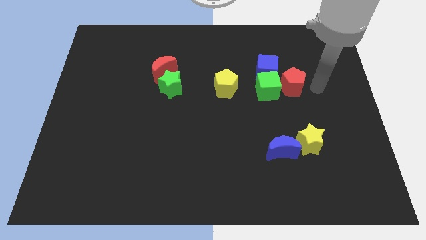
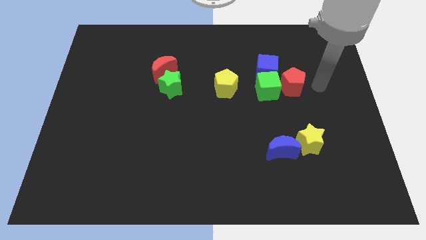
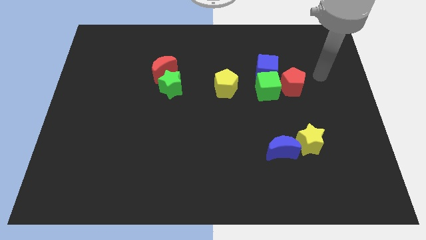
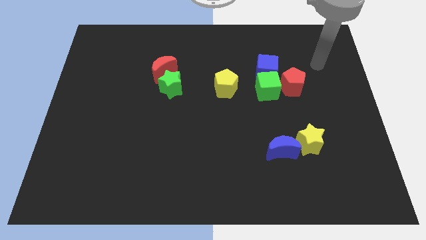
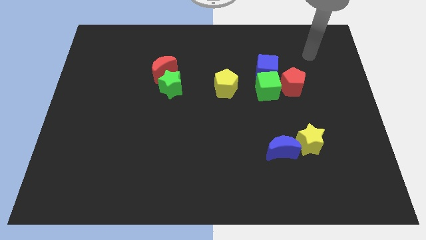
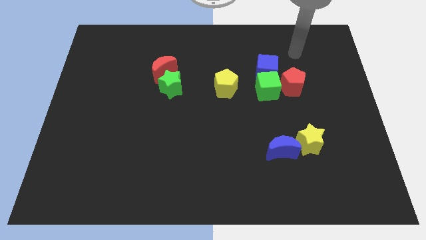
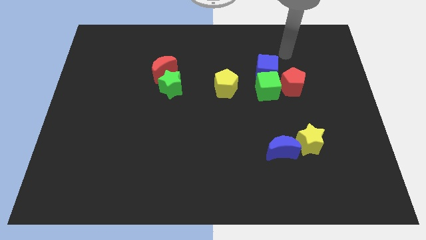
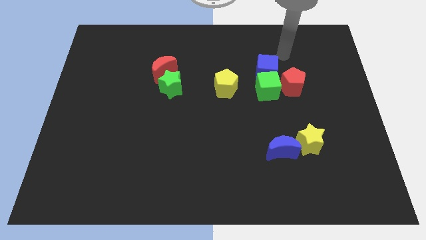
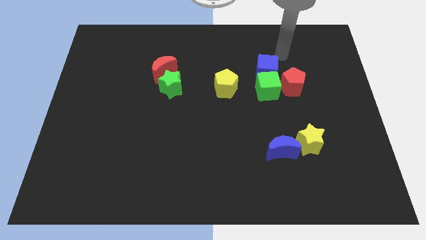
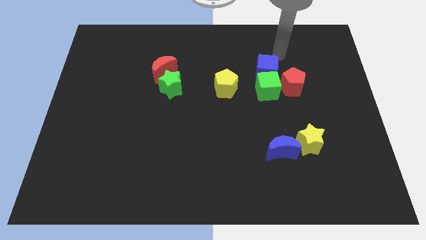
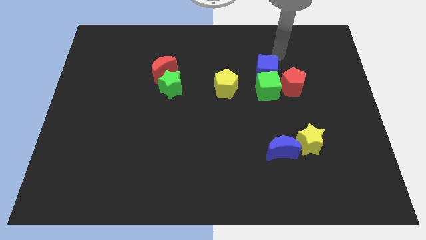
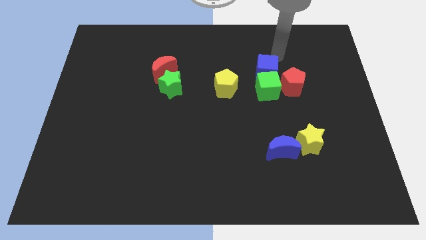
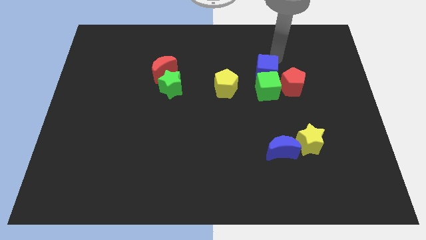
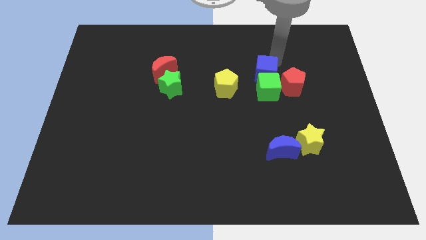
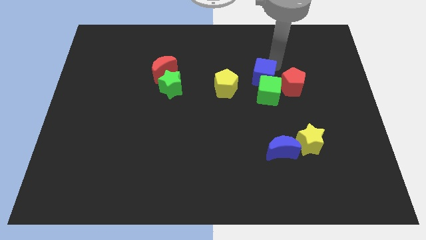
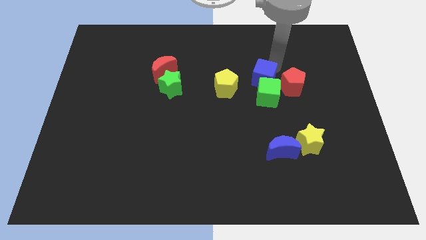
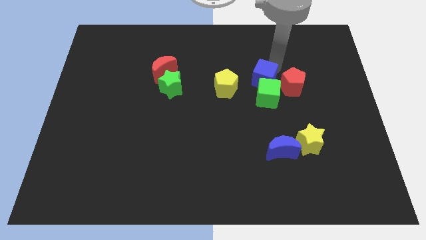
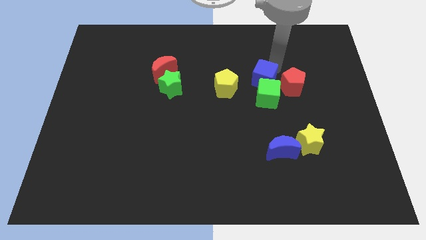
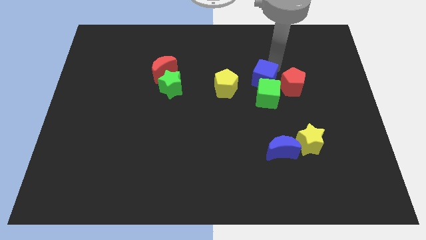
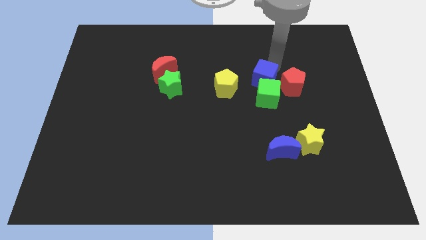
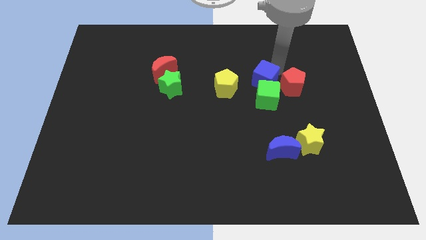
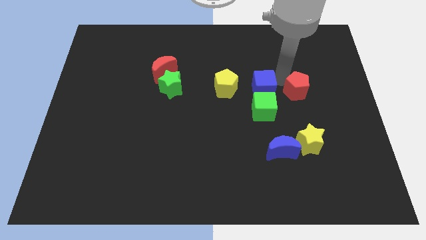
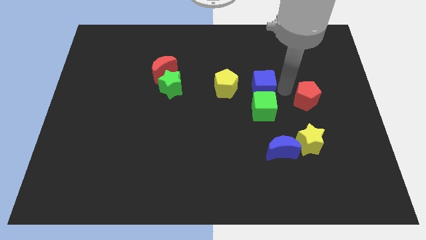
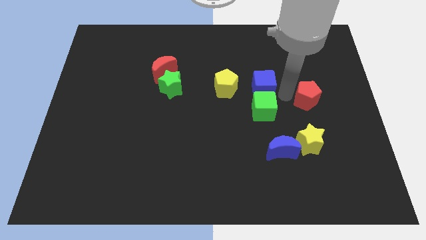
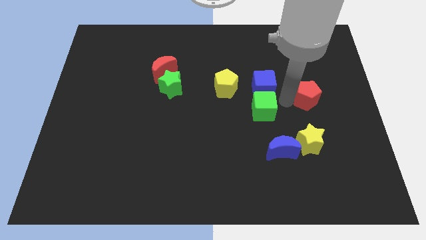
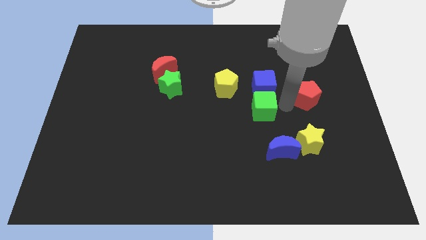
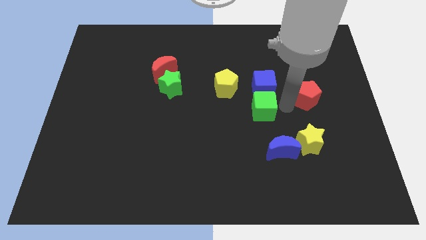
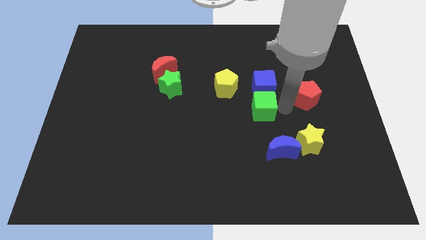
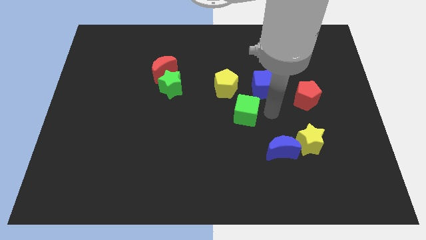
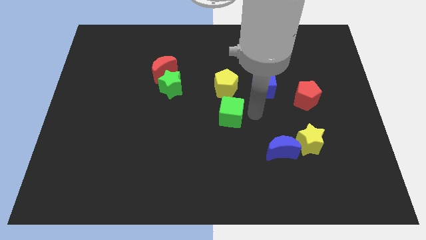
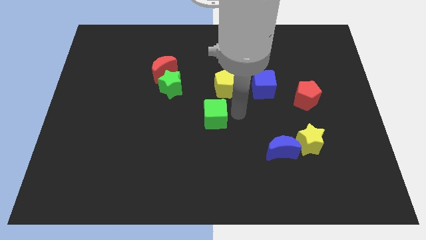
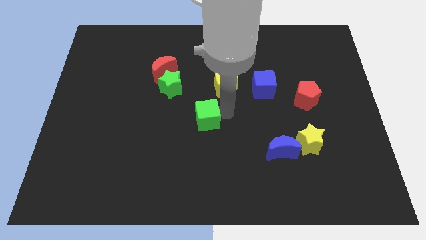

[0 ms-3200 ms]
move the green cube to the center of the board

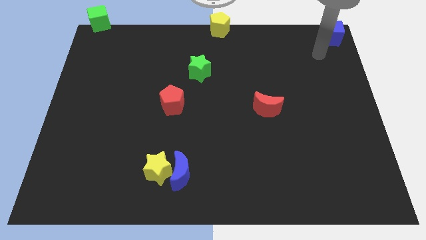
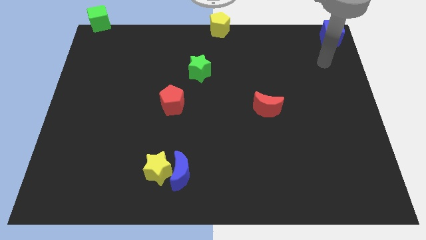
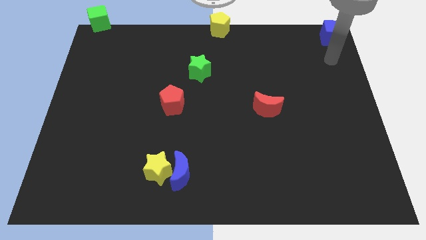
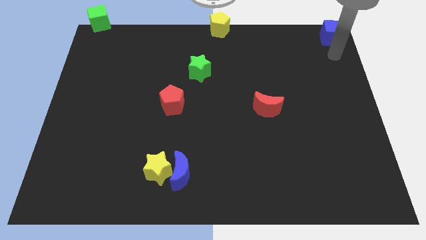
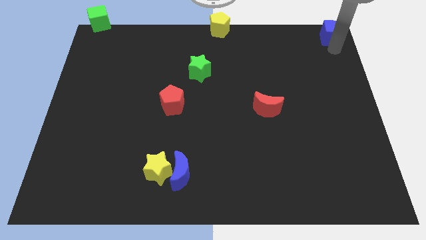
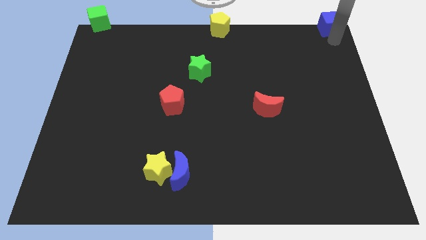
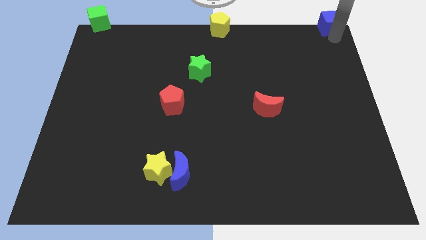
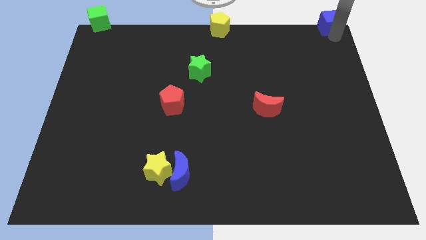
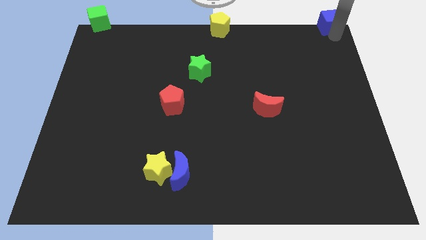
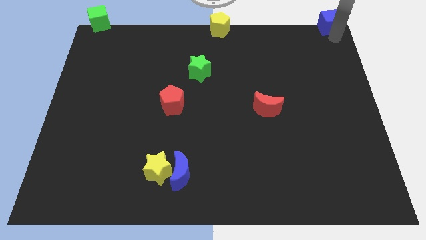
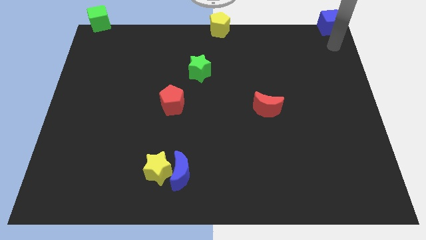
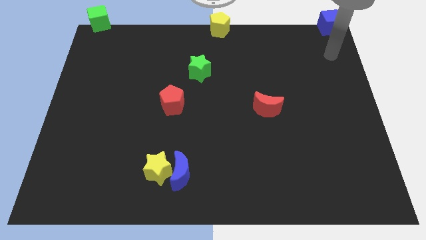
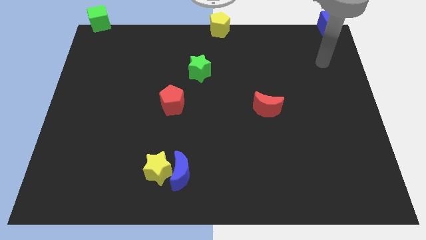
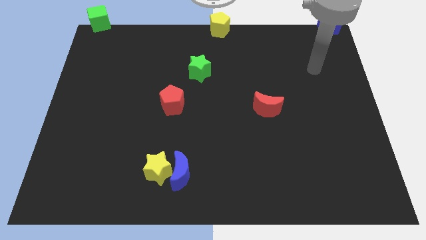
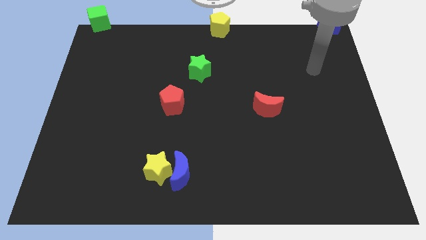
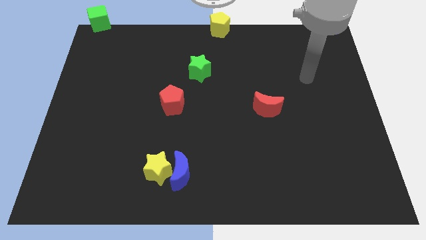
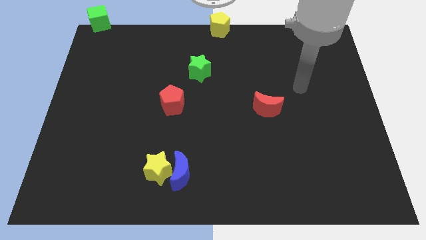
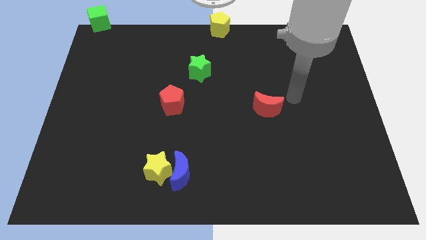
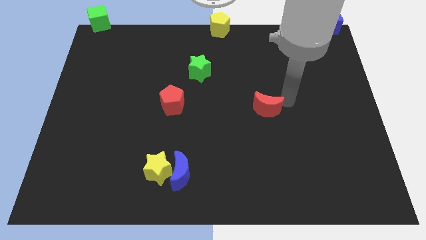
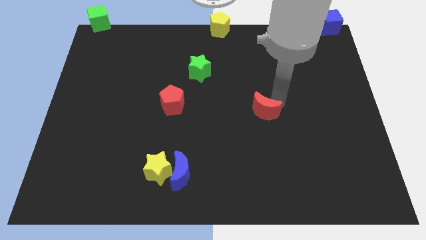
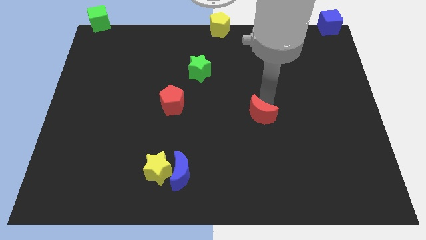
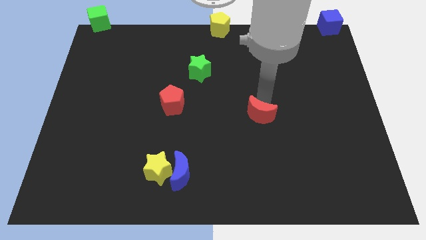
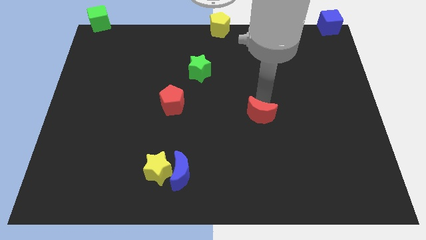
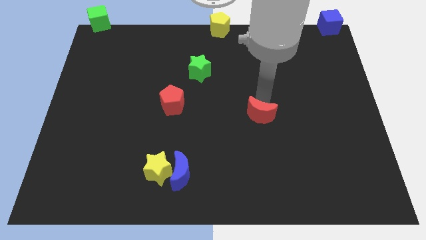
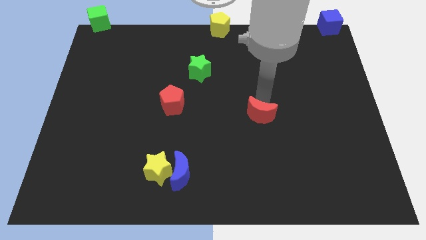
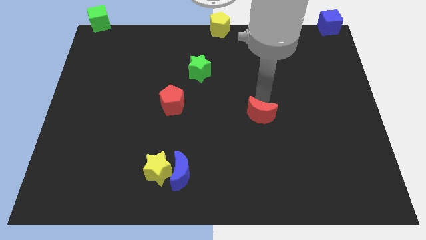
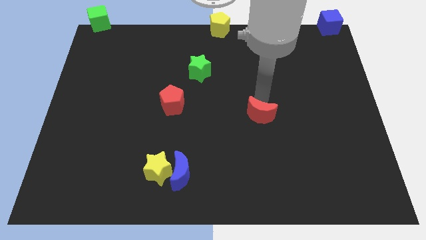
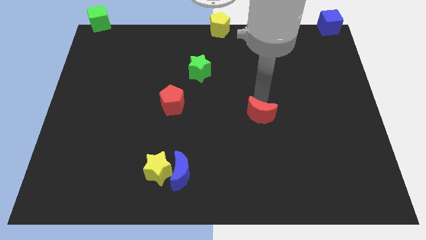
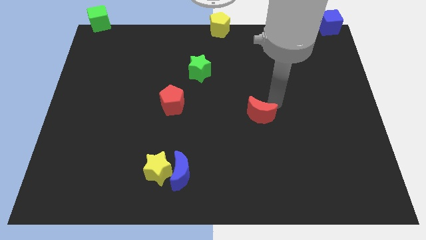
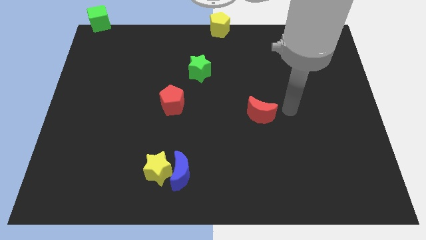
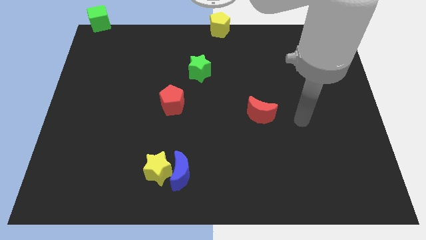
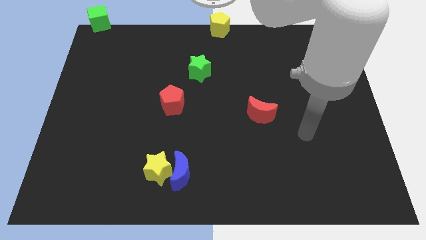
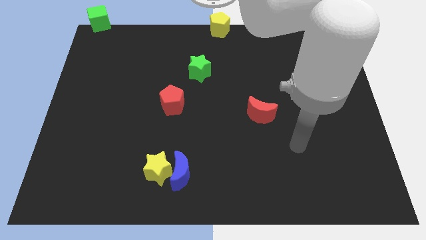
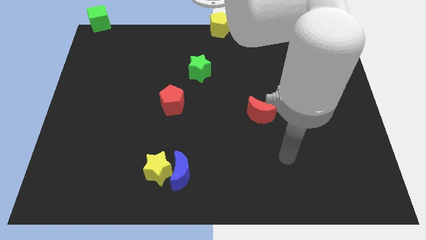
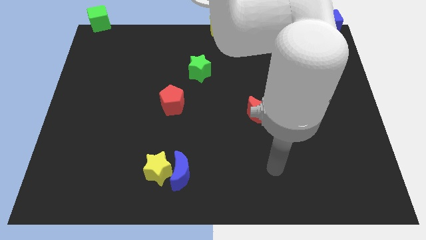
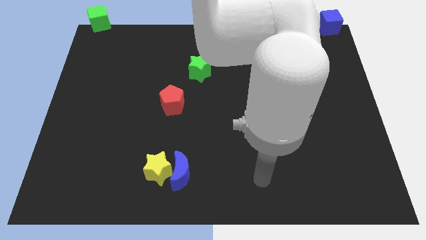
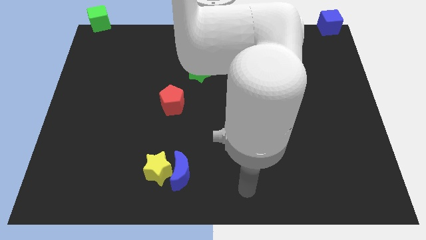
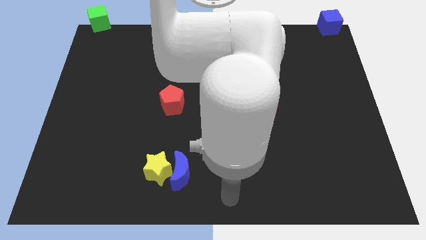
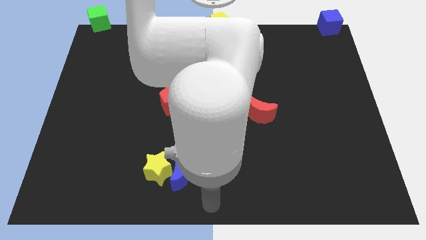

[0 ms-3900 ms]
push the red crescent slightly towards center

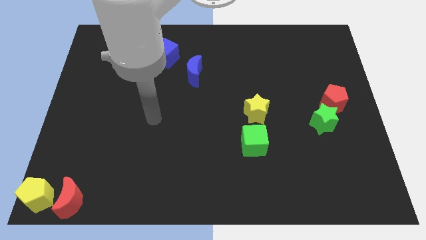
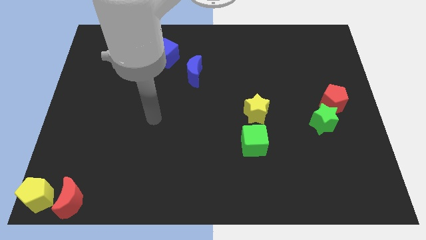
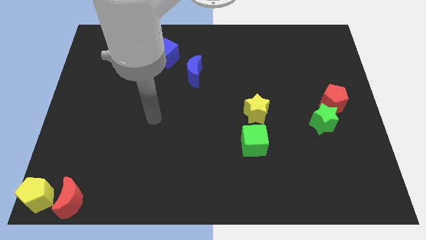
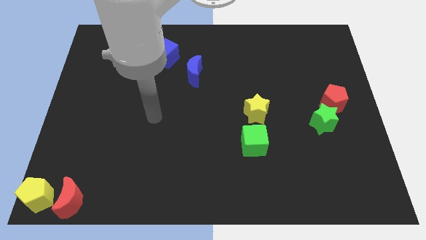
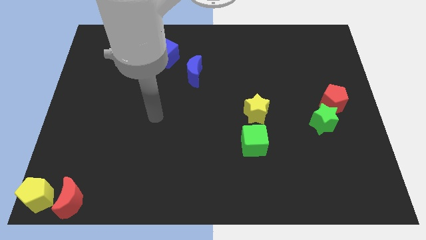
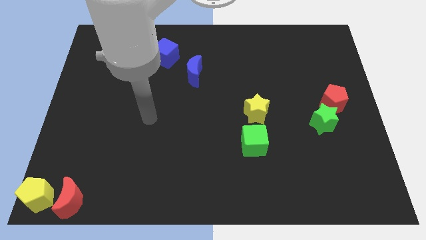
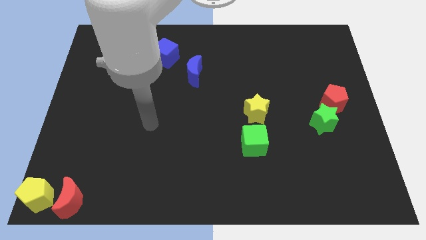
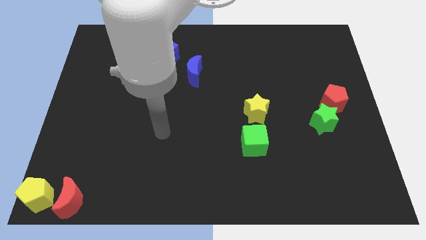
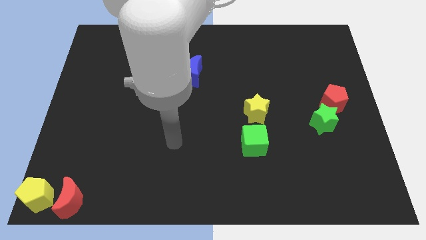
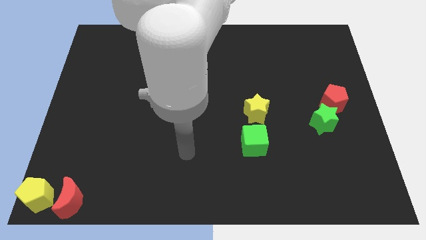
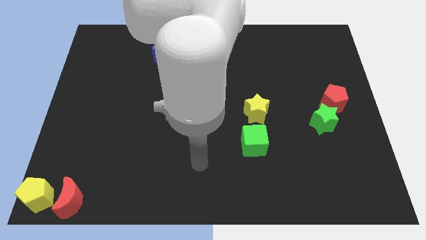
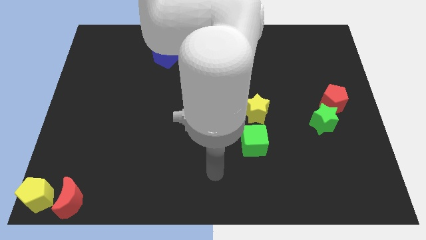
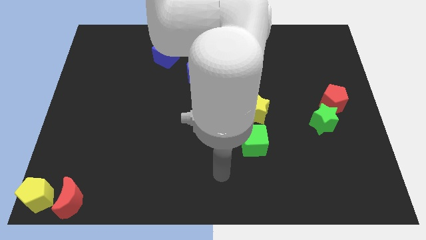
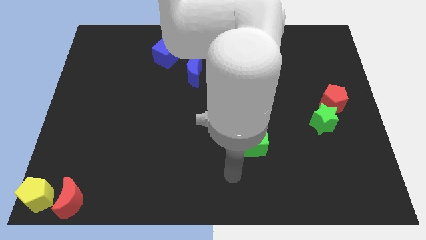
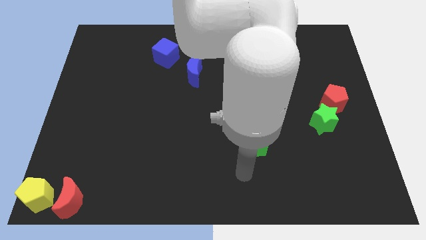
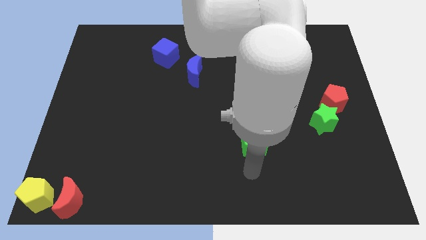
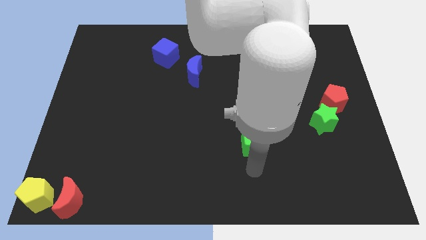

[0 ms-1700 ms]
point your hand below the green cube

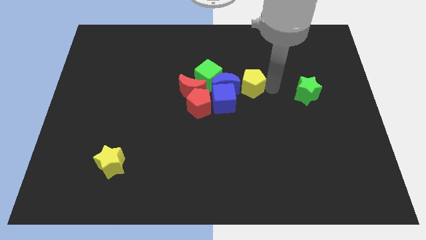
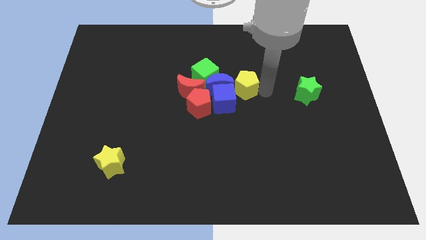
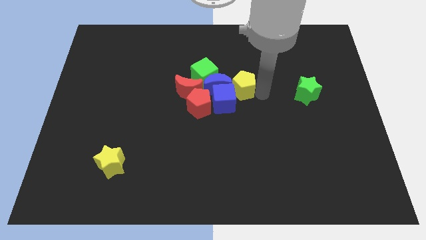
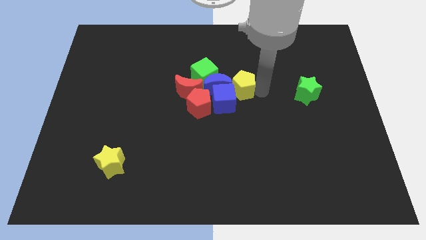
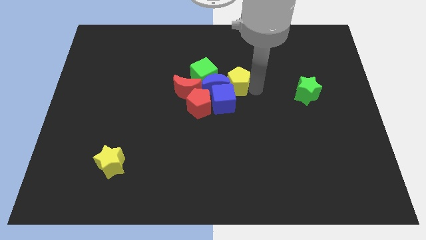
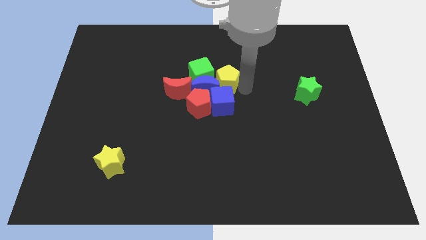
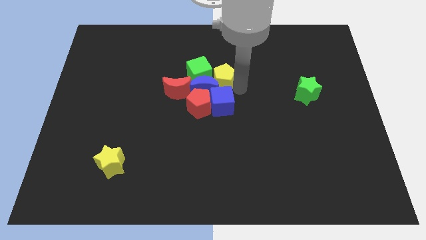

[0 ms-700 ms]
push yellow pentagon above blue cube
